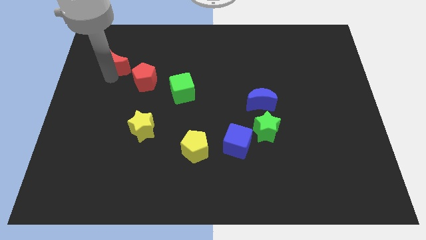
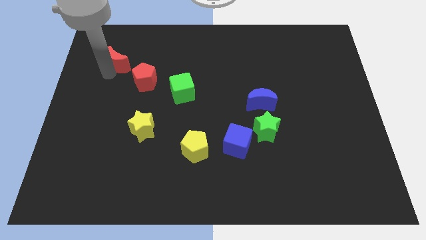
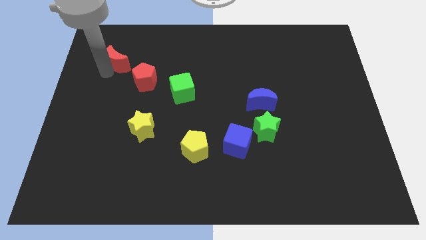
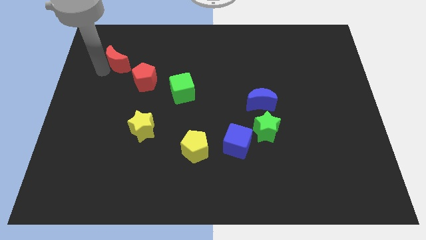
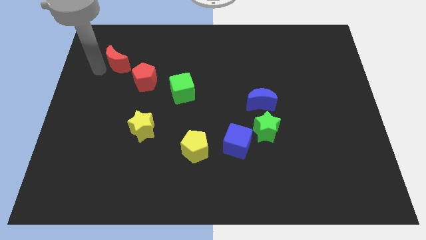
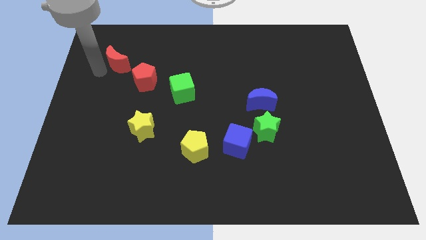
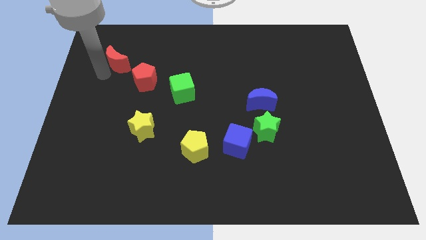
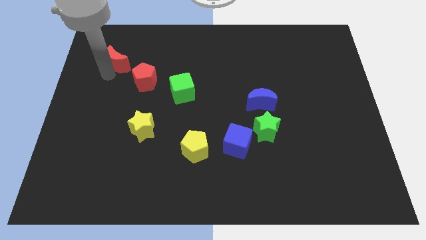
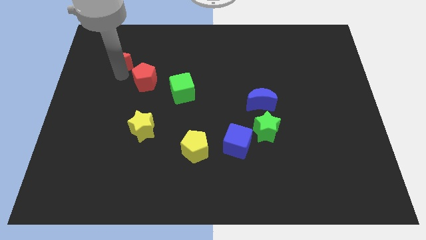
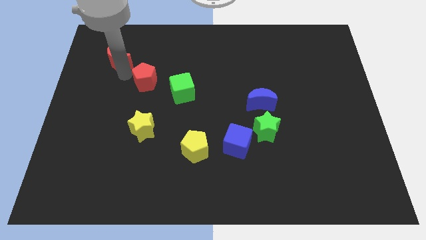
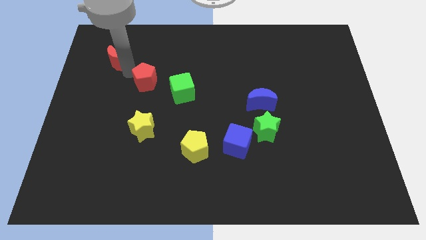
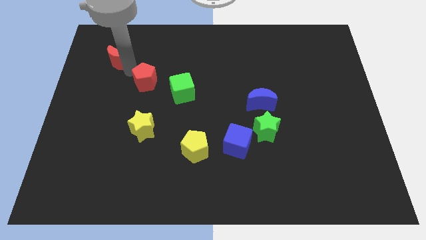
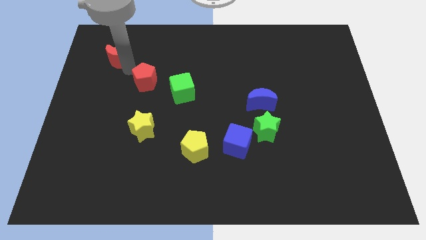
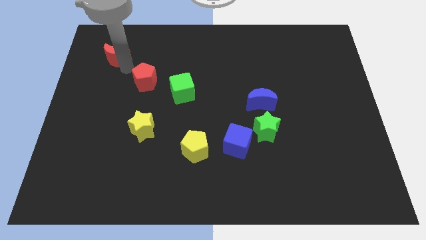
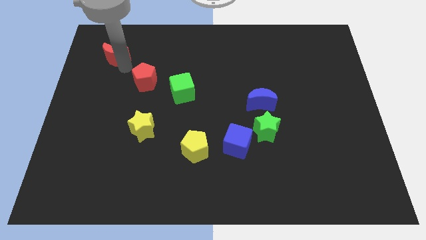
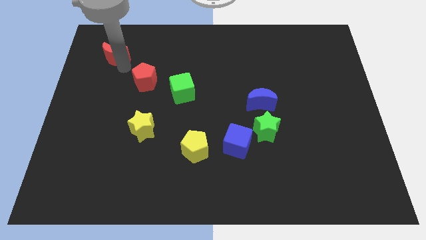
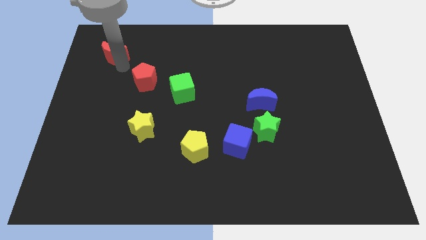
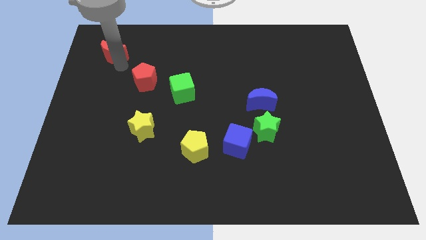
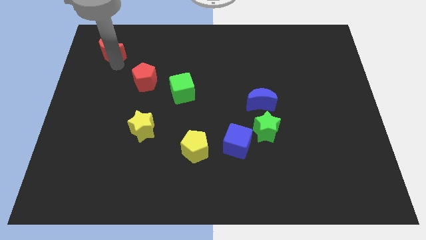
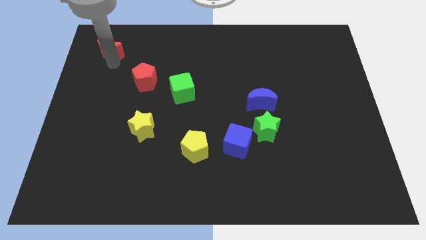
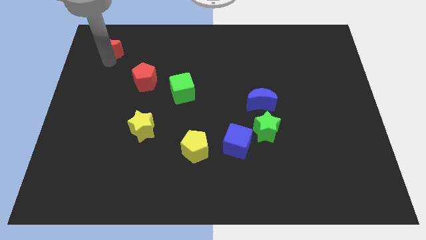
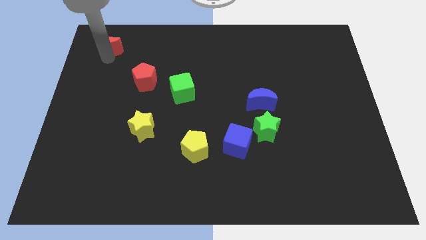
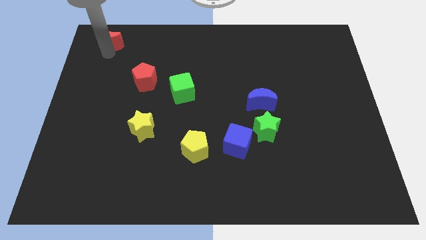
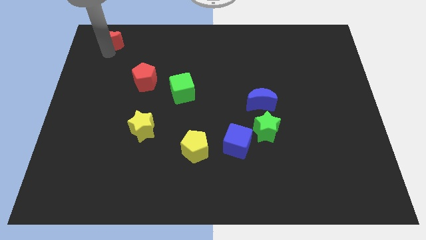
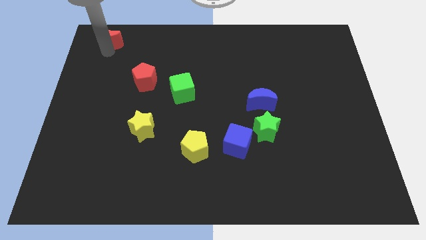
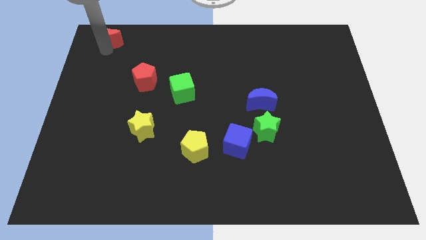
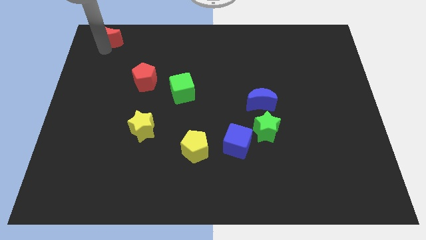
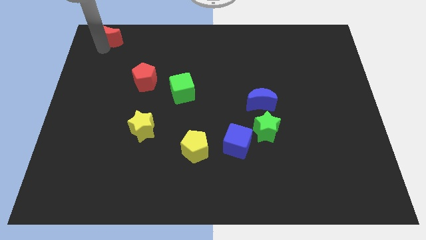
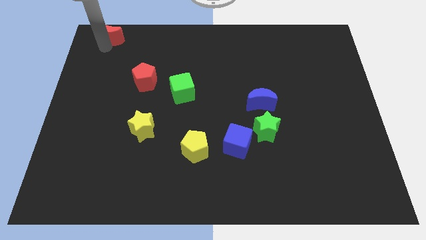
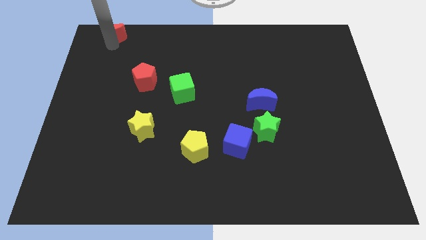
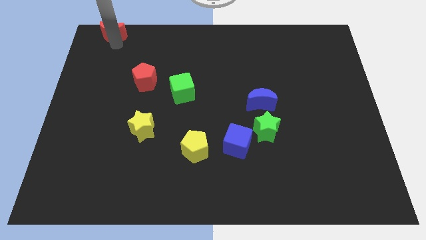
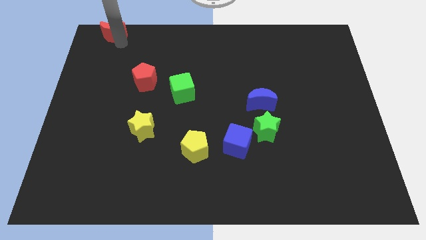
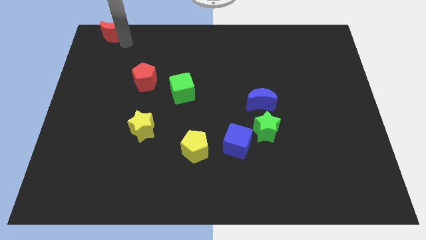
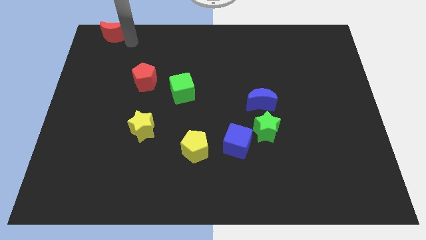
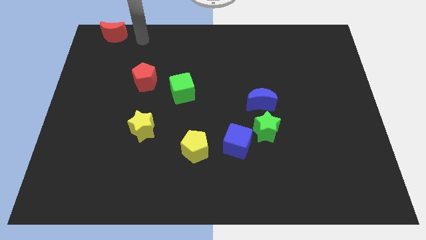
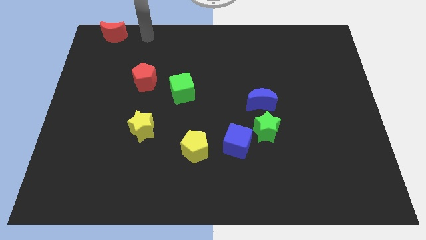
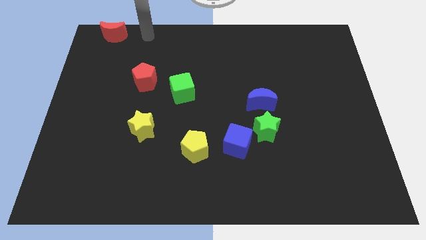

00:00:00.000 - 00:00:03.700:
move red crescent to top left corner

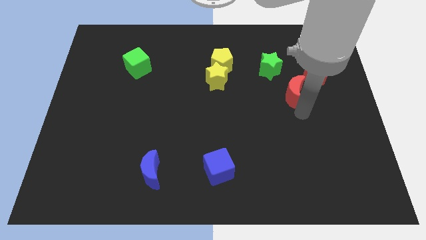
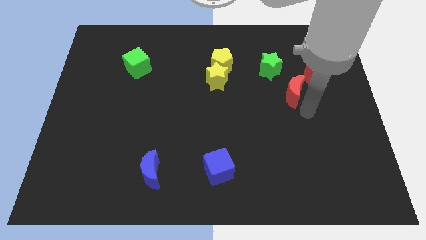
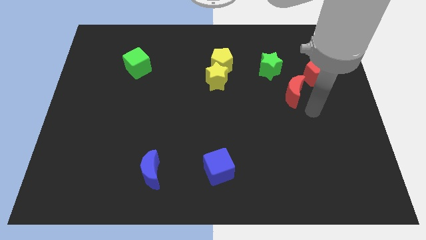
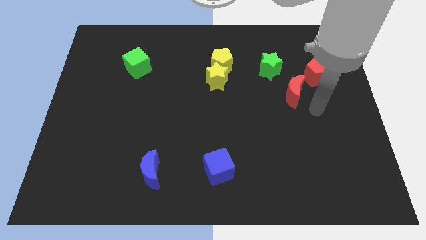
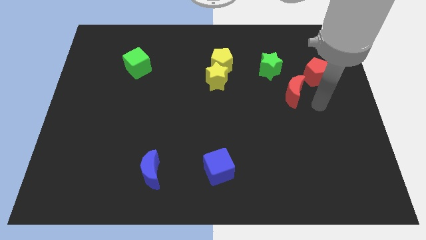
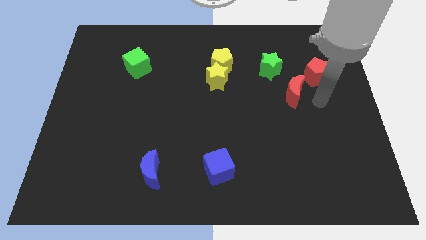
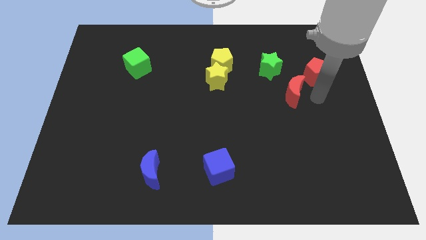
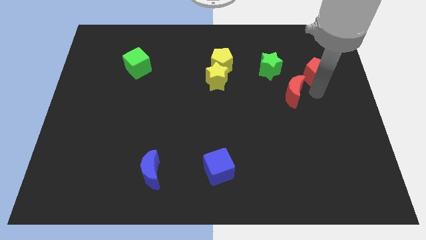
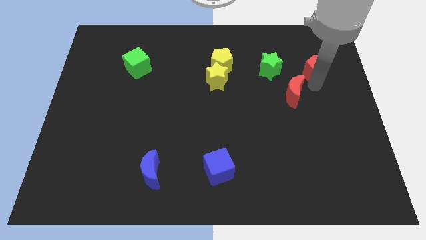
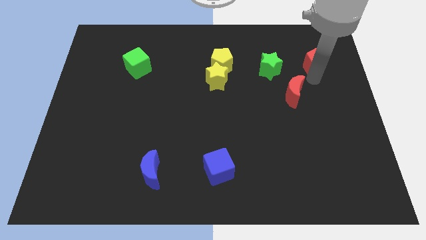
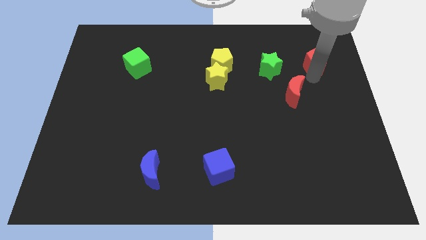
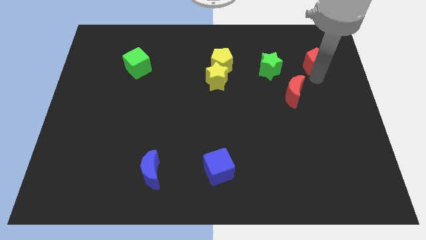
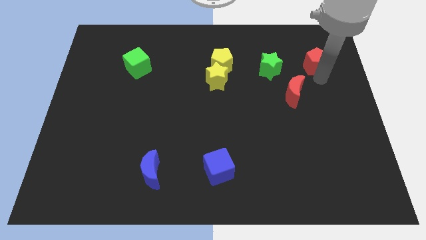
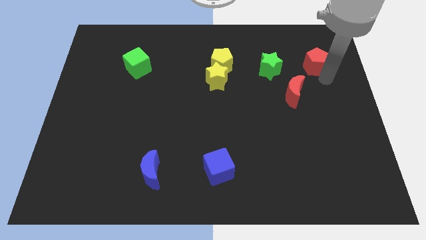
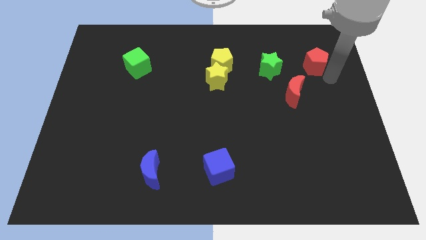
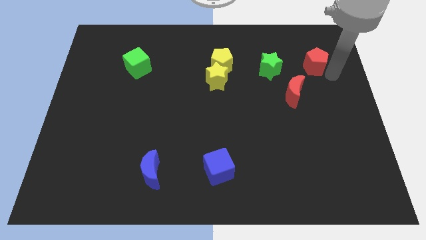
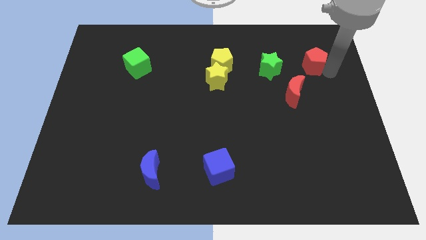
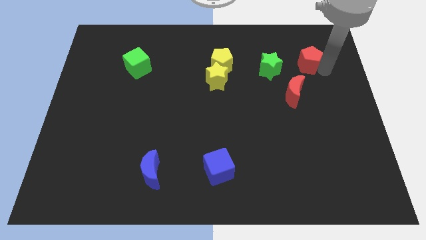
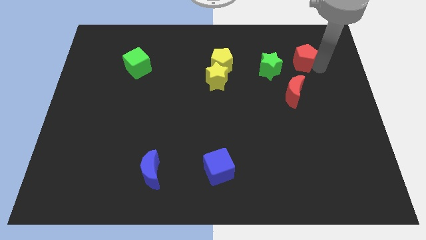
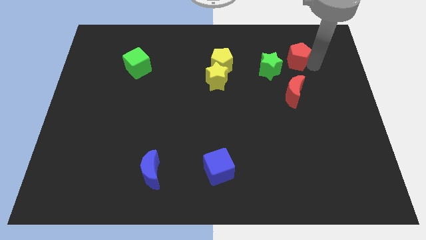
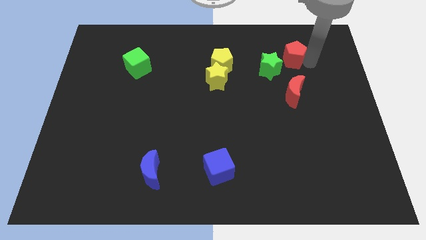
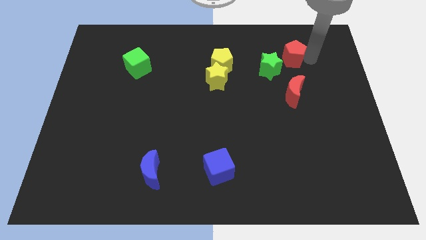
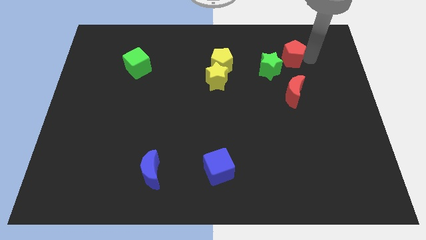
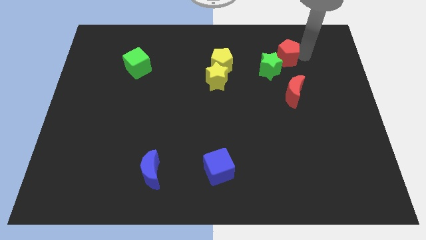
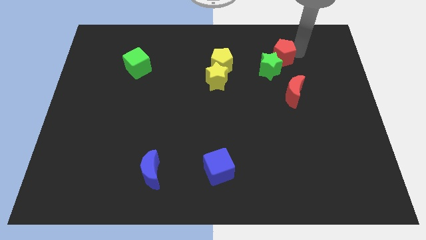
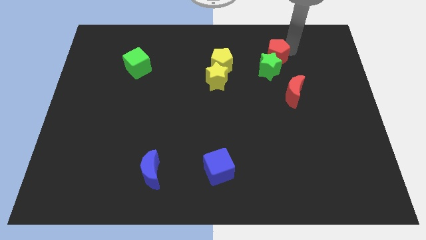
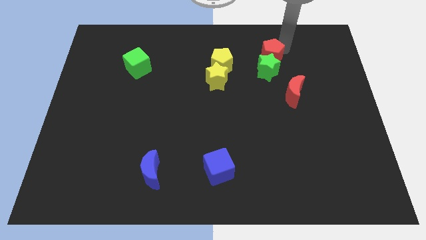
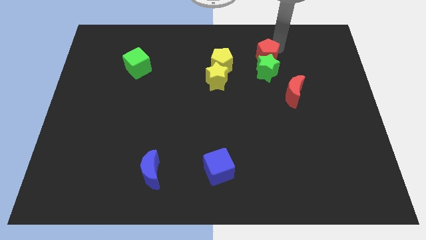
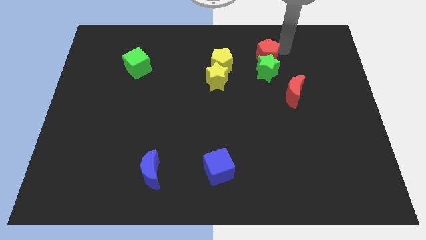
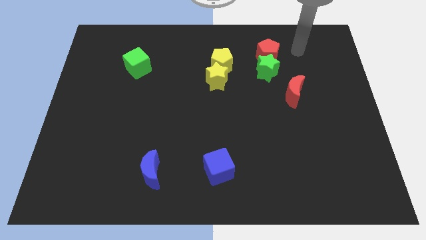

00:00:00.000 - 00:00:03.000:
push the red pentagon to the top of the green star

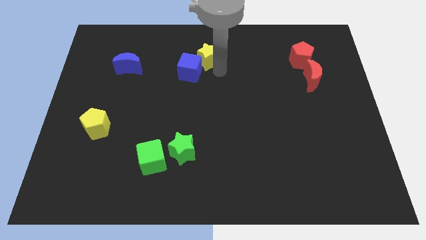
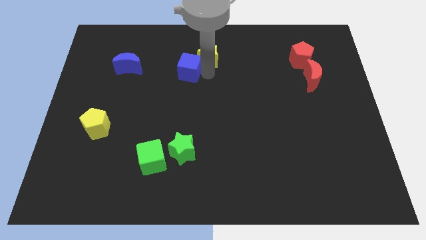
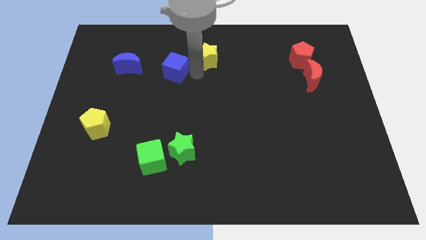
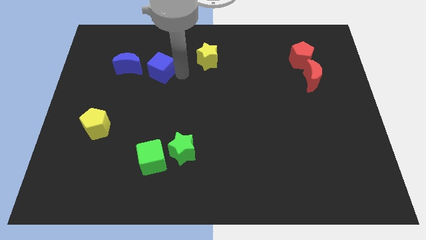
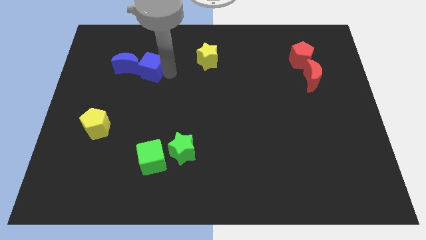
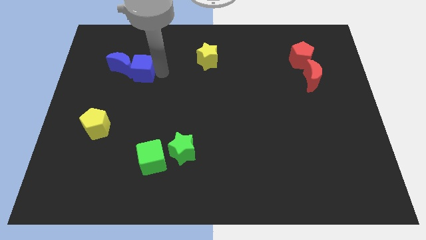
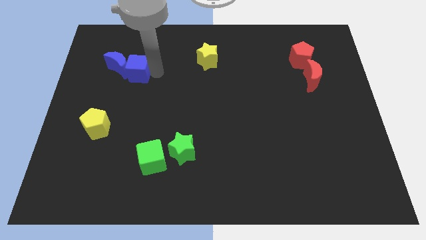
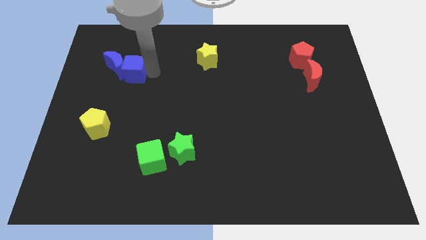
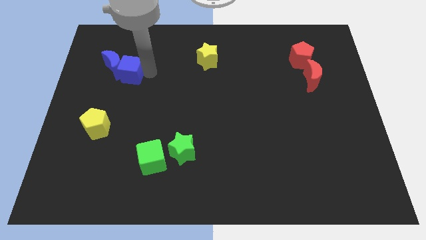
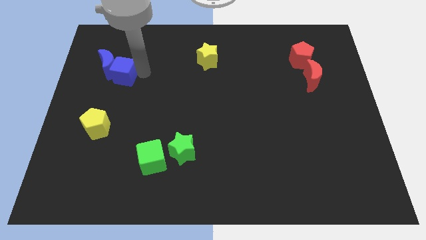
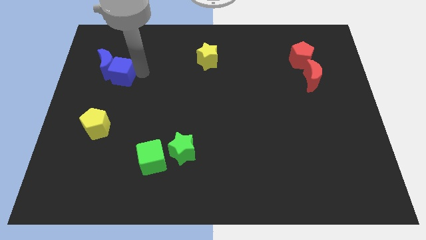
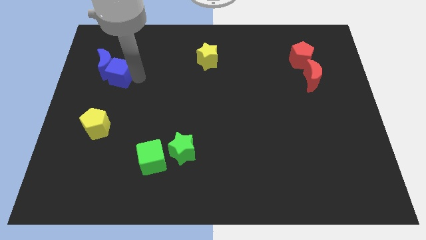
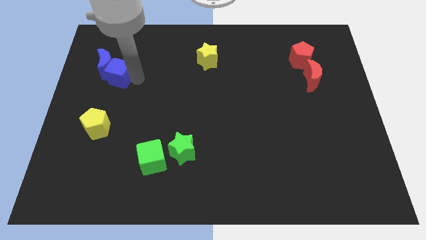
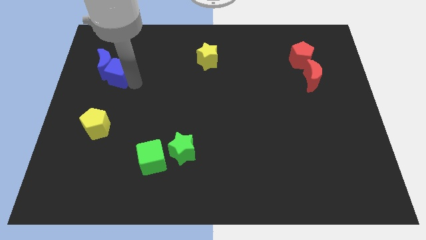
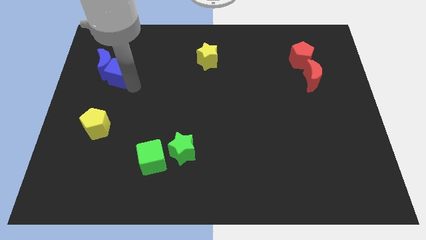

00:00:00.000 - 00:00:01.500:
push the blue cube to the right of the blue crescent

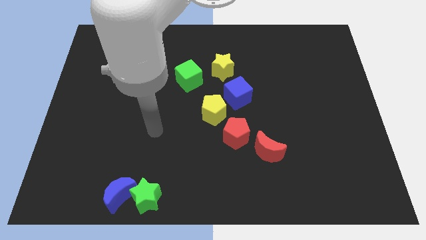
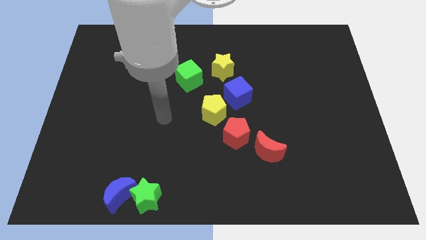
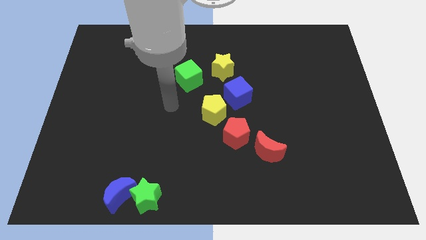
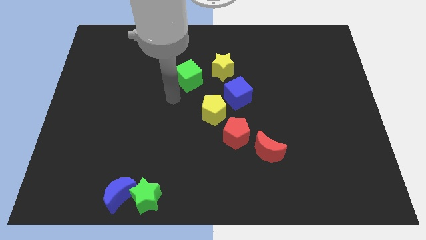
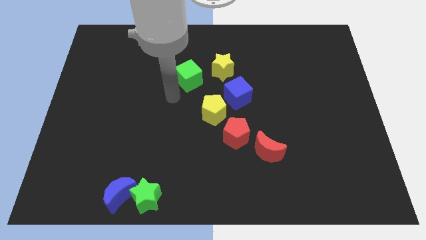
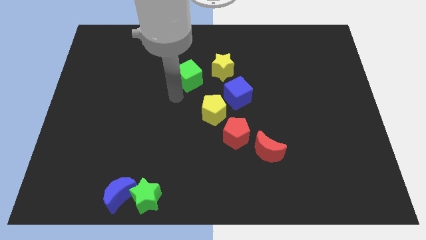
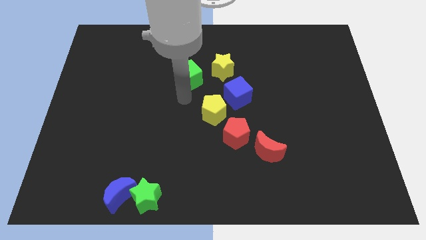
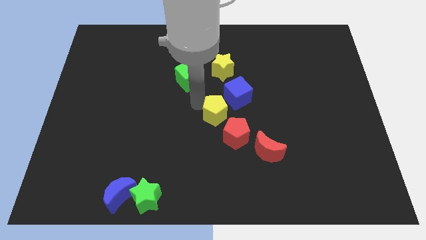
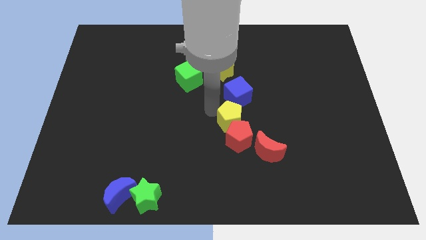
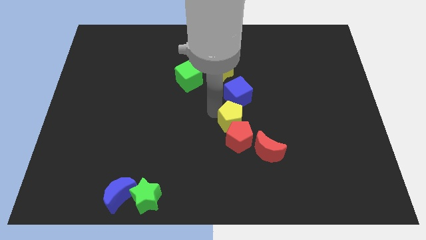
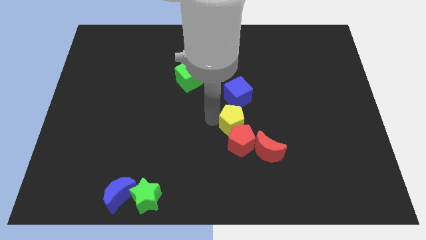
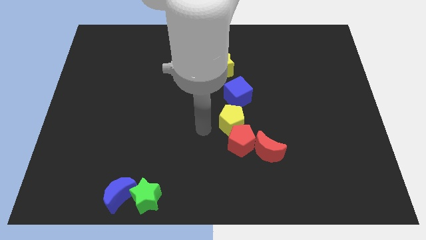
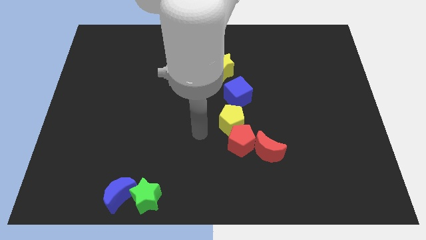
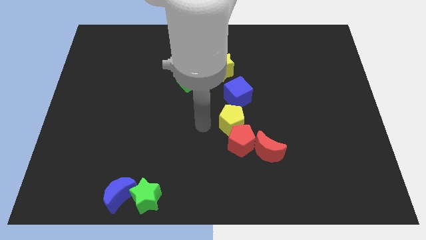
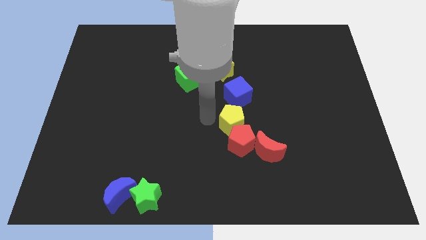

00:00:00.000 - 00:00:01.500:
push the yellow pentagon into the red pentagon
